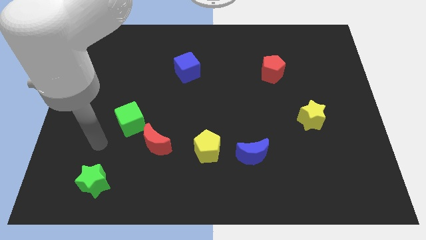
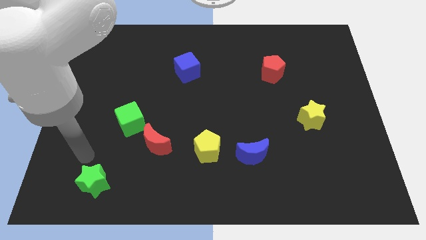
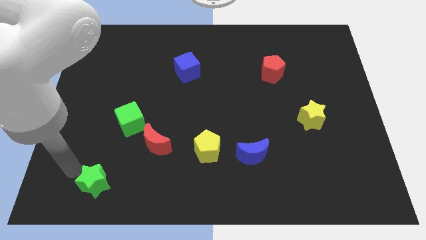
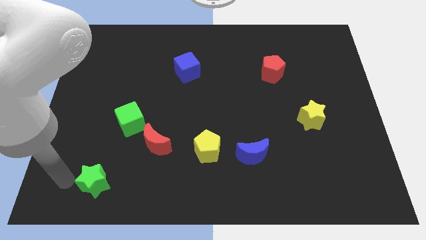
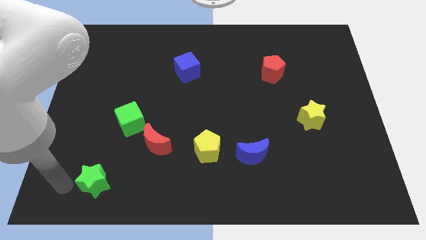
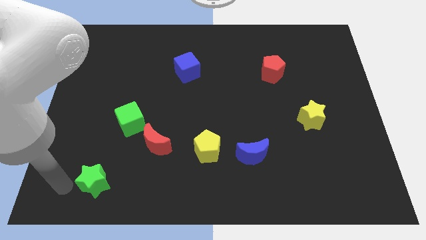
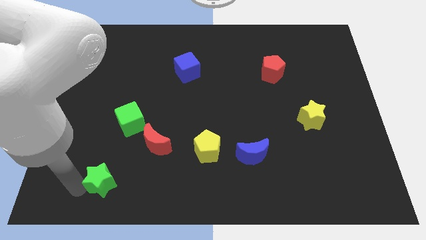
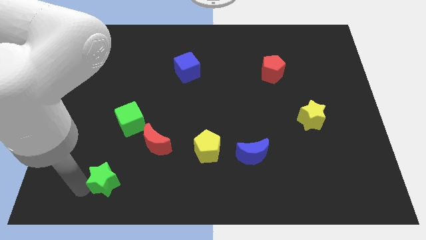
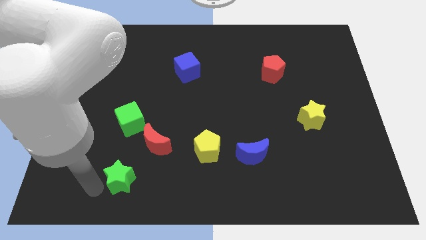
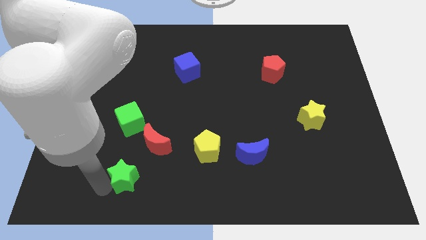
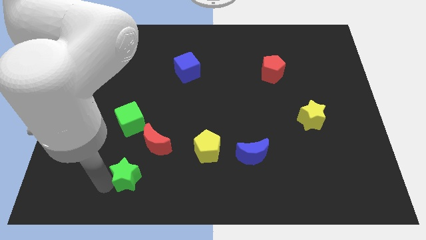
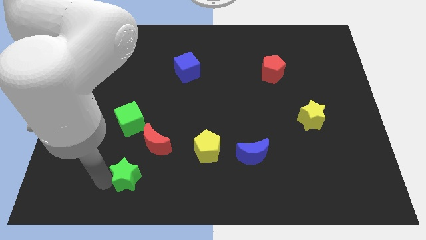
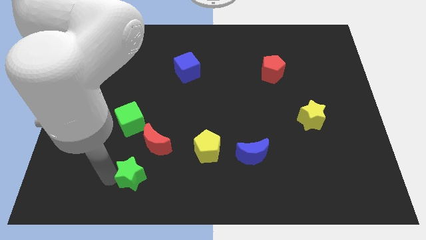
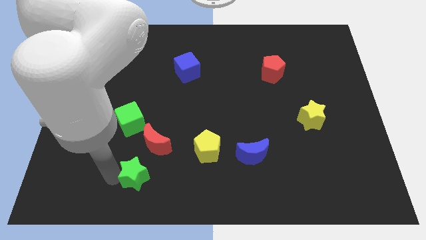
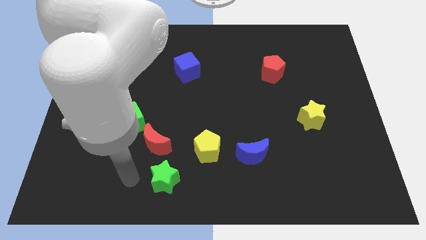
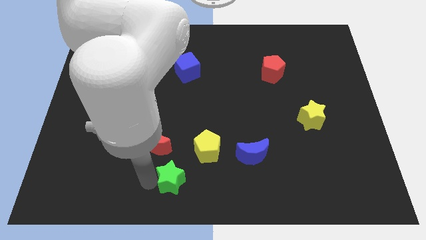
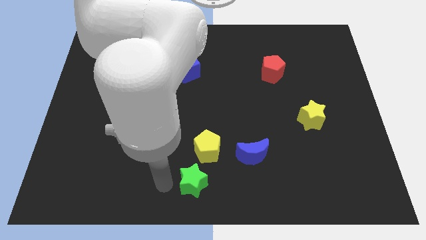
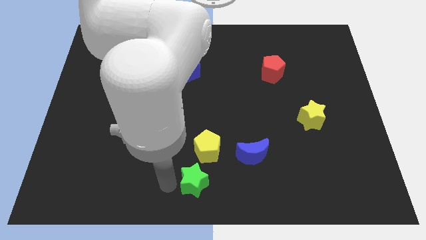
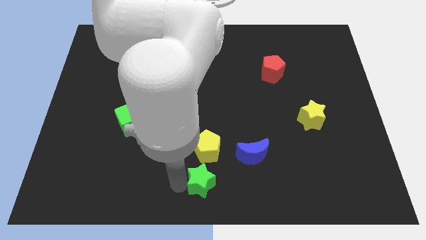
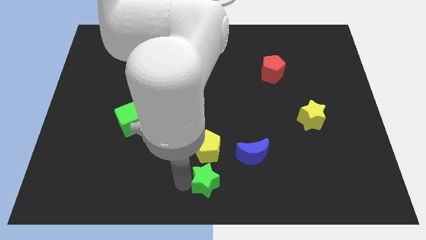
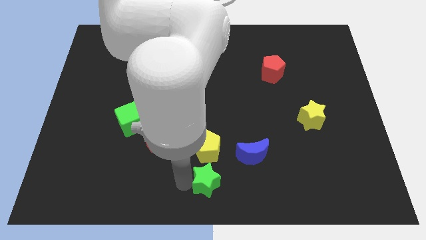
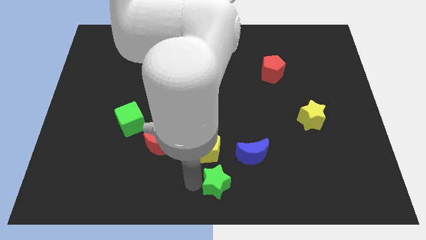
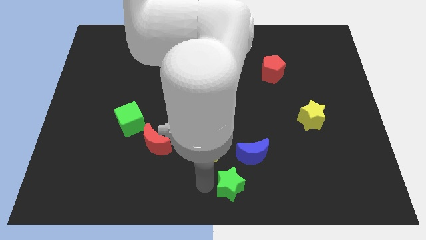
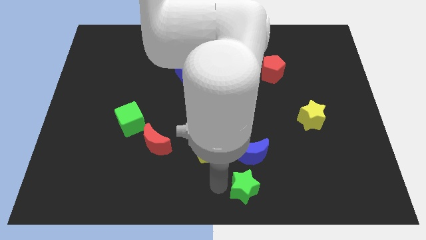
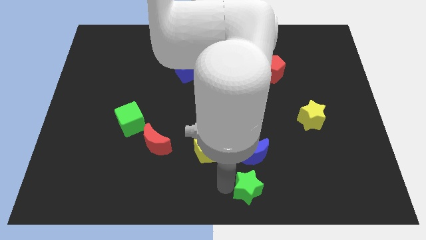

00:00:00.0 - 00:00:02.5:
place green star to the blue moon

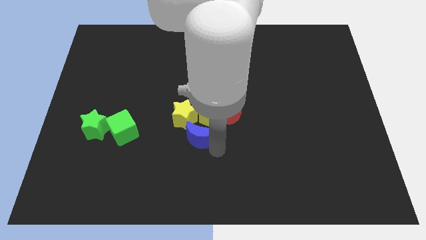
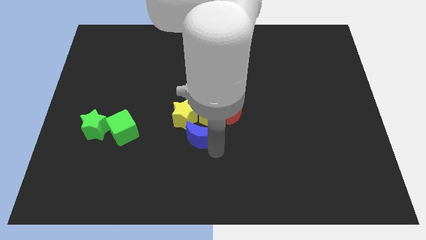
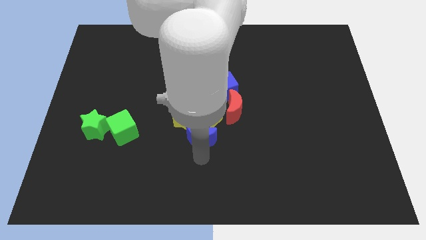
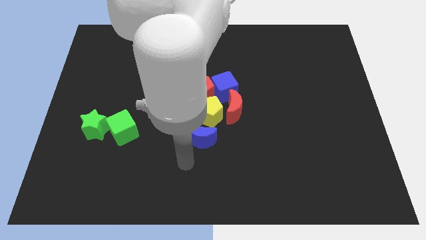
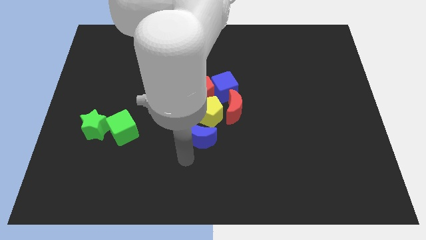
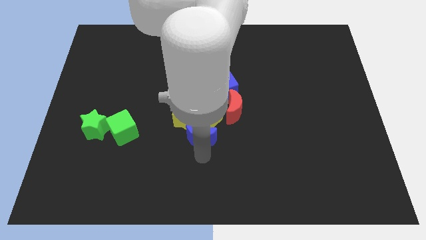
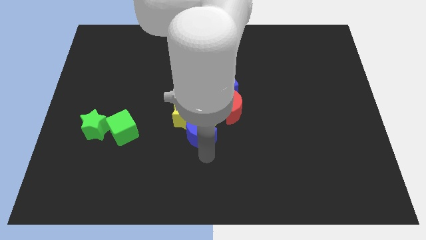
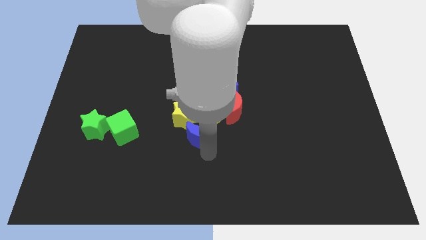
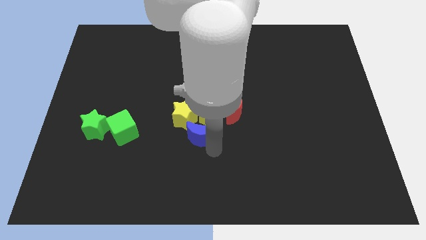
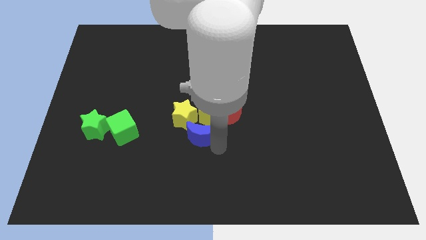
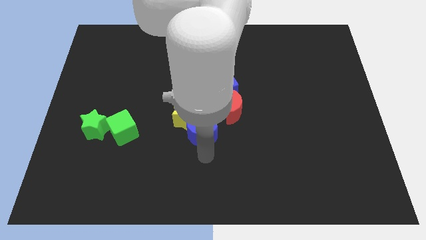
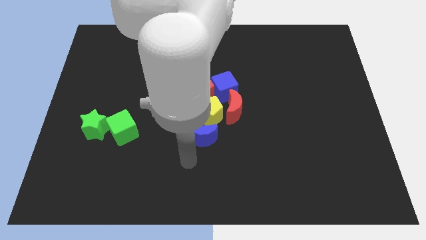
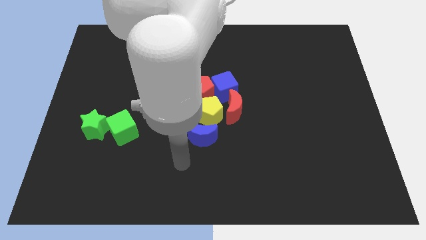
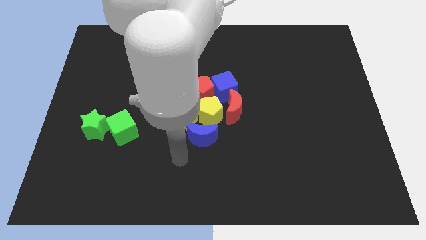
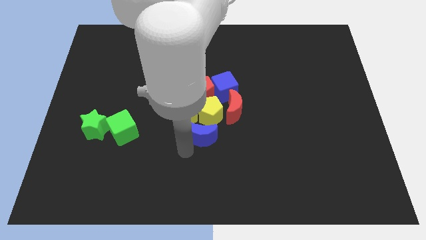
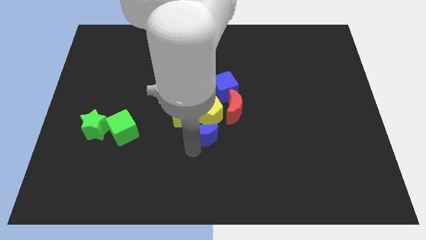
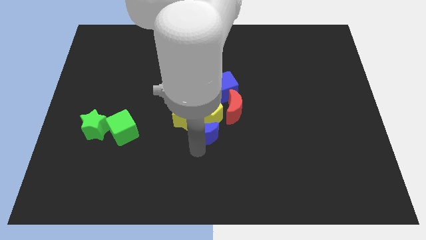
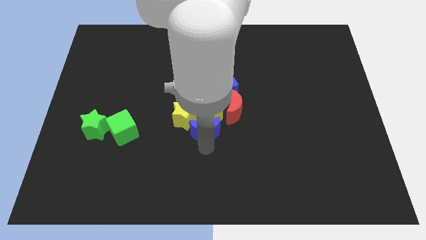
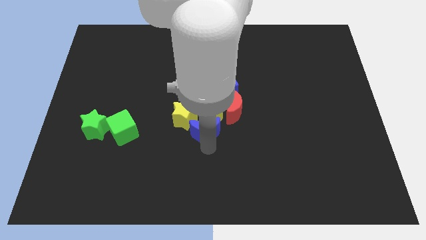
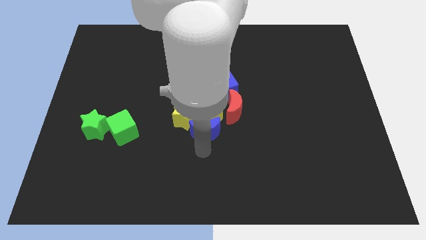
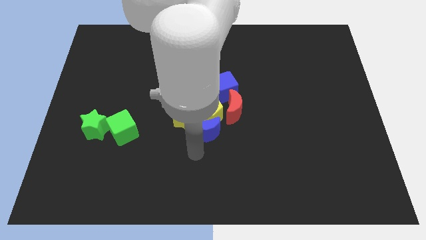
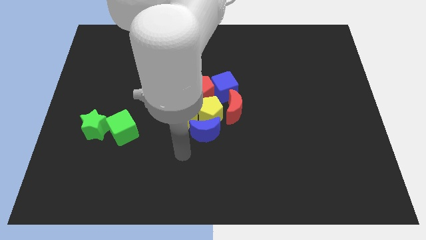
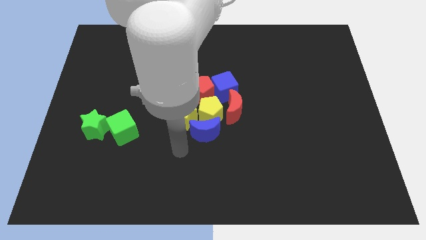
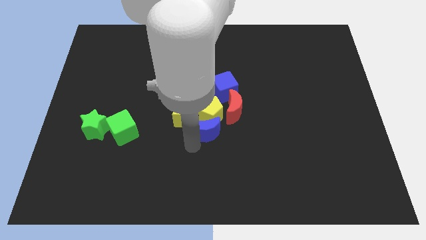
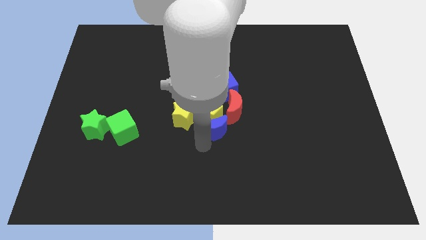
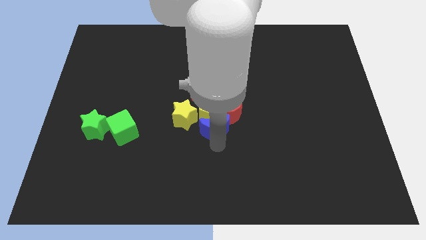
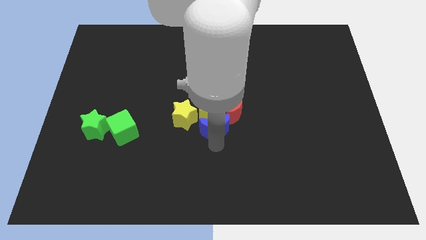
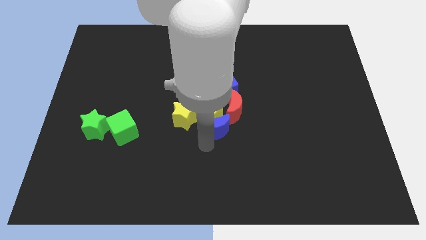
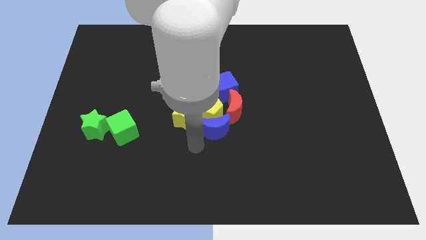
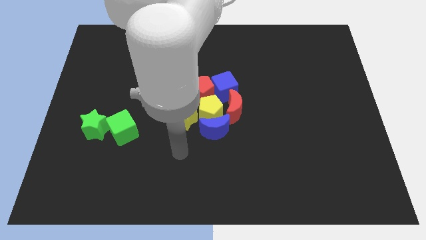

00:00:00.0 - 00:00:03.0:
push the blue crescent towards the yellow pentagon

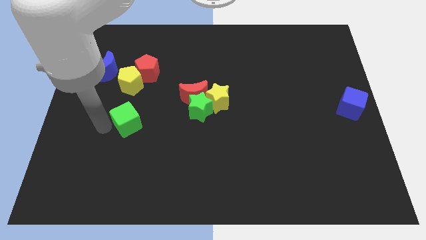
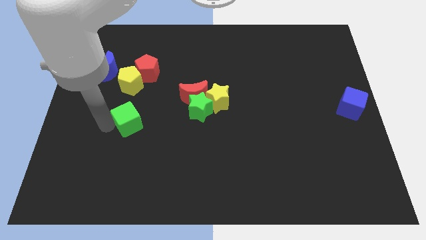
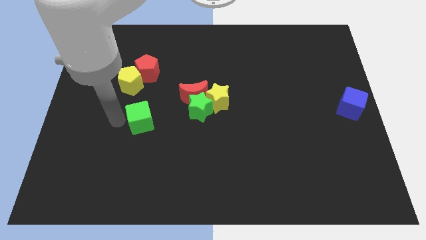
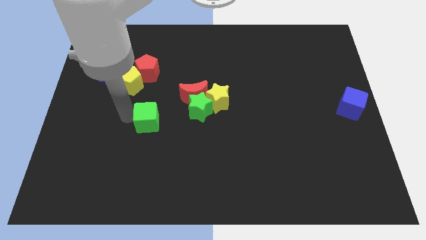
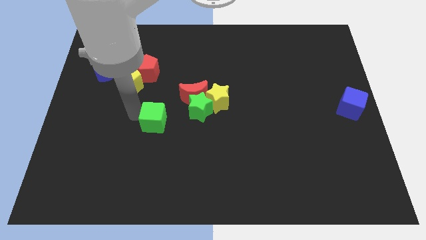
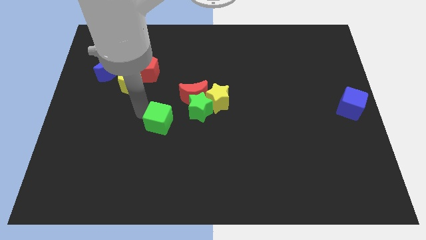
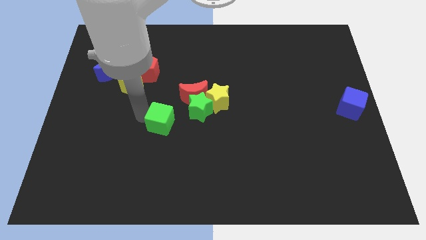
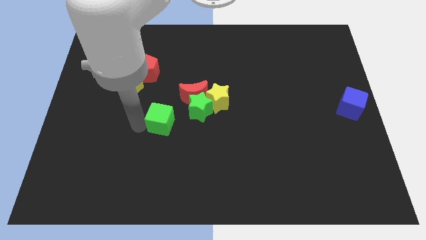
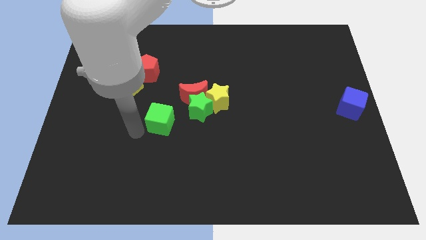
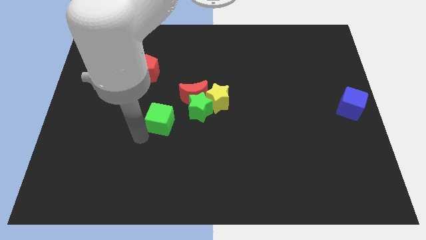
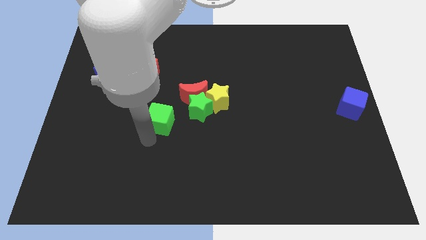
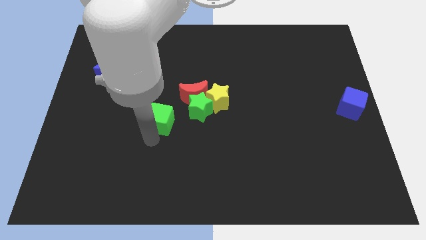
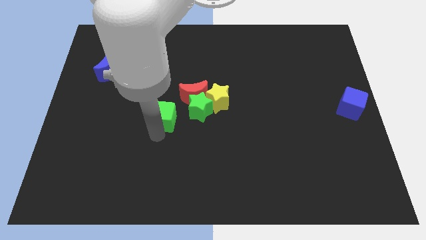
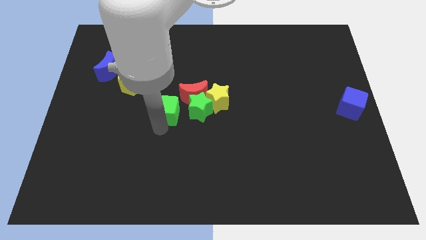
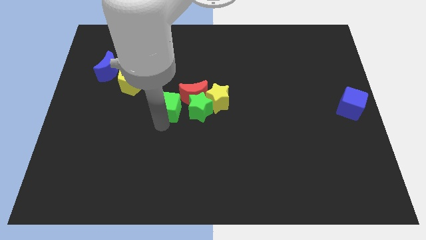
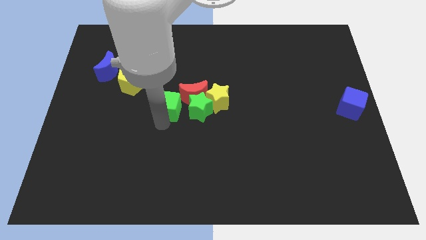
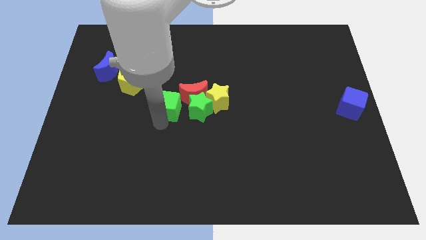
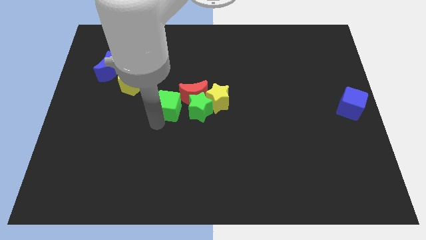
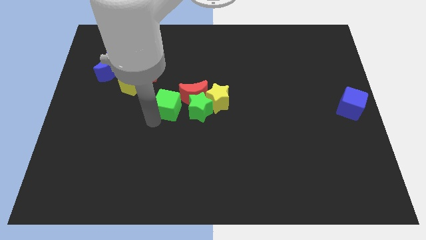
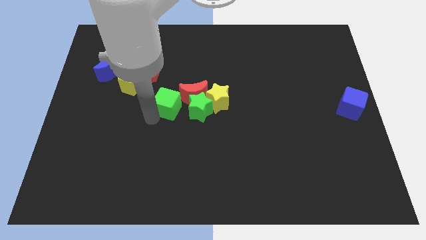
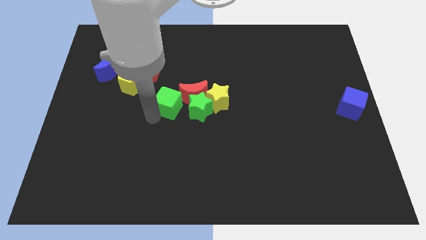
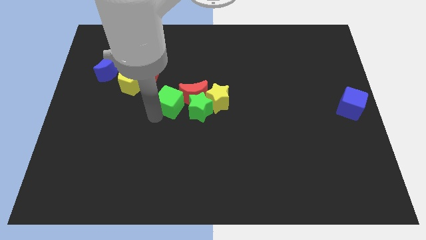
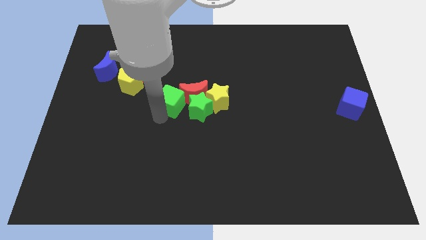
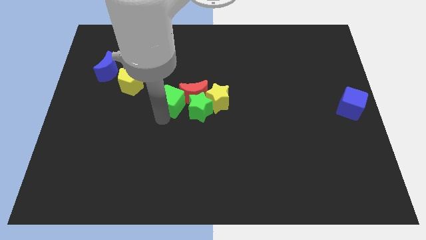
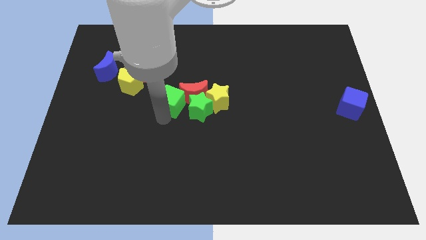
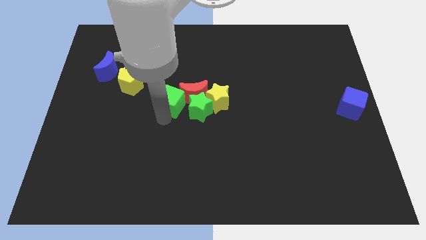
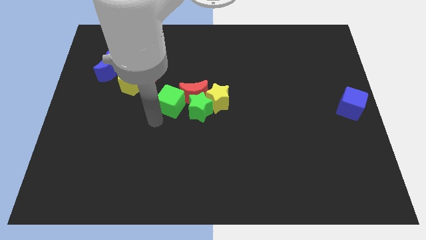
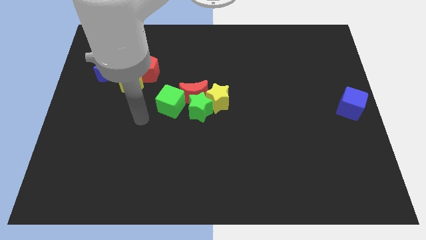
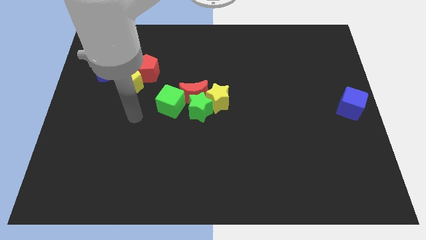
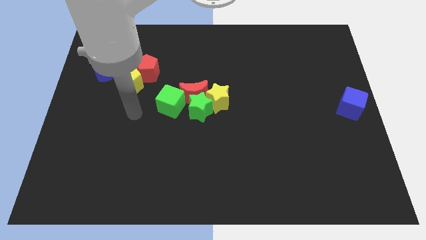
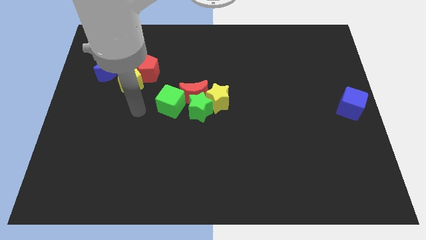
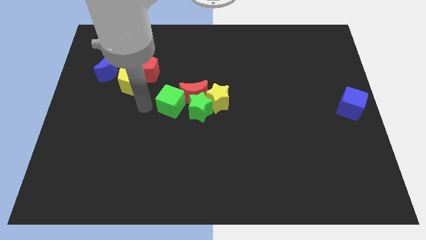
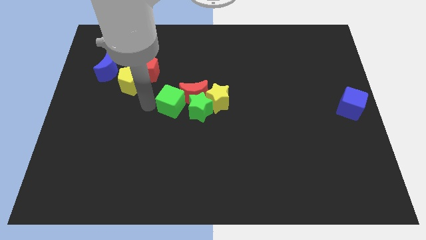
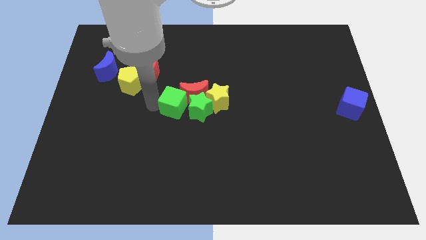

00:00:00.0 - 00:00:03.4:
move green cube into group of blocks

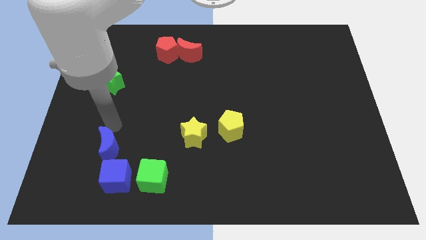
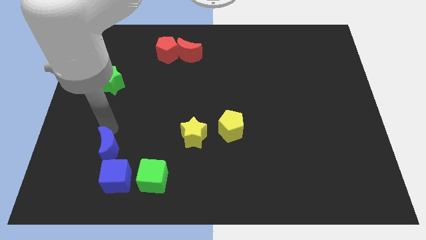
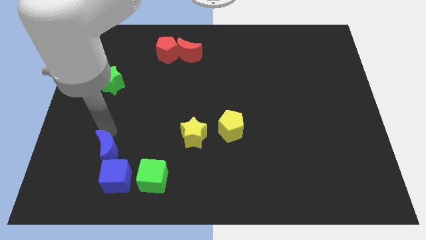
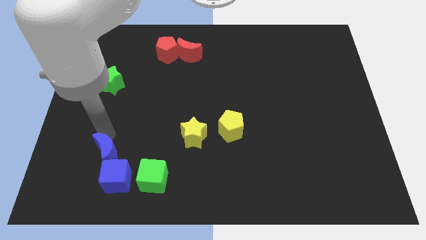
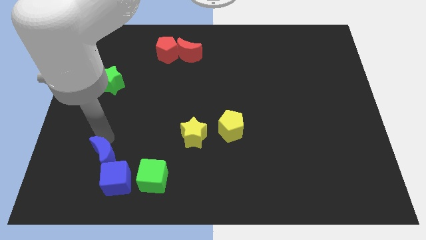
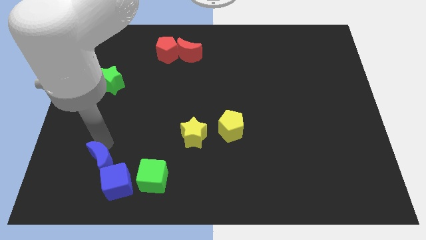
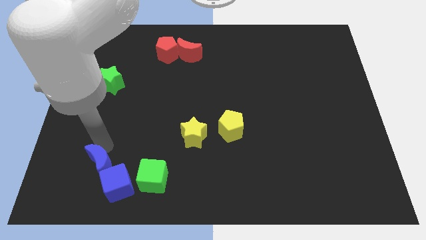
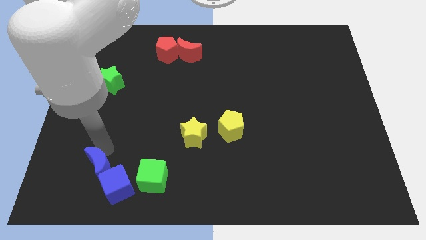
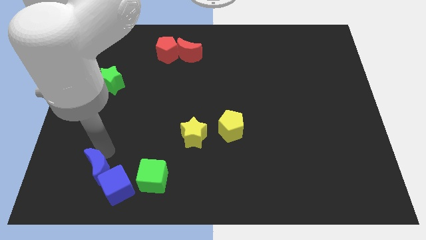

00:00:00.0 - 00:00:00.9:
push the blue moon into the blue cube
